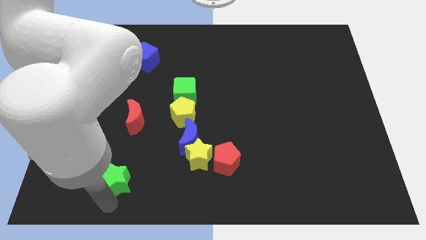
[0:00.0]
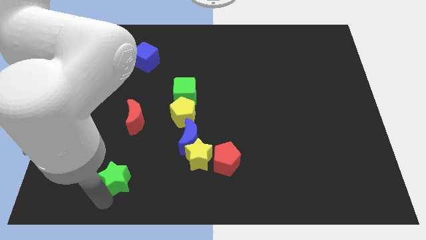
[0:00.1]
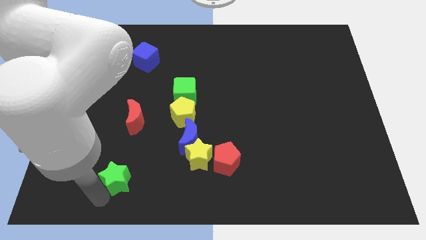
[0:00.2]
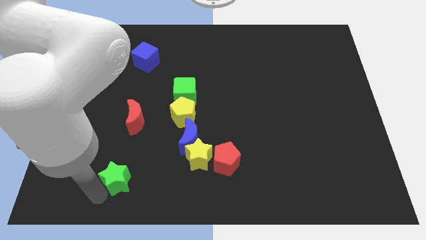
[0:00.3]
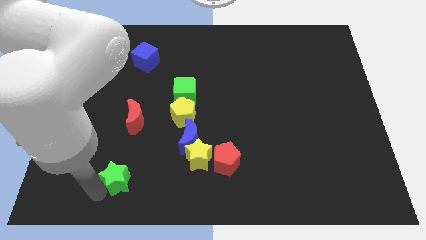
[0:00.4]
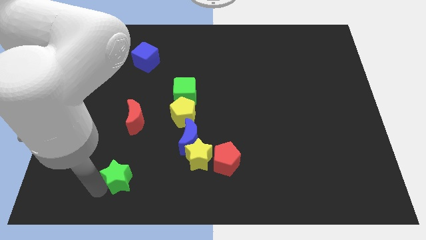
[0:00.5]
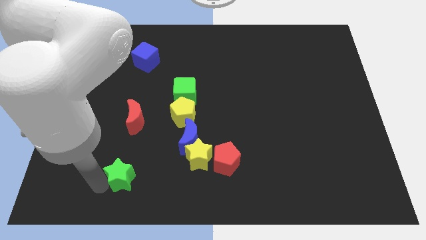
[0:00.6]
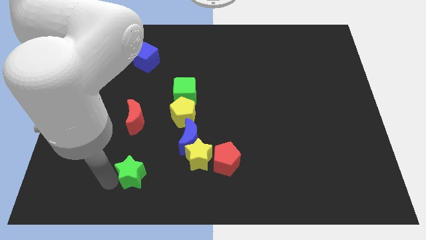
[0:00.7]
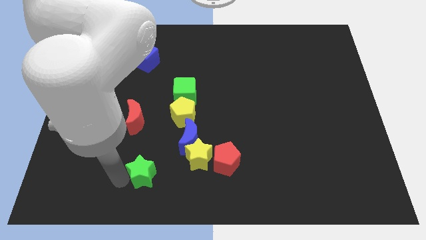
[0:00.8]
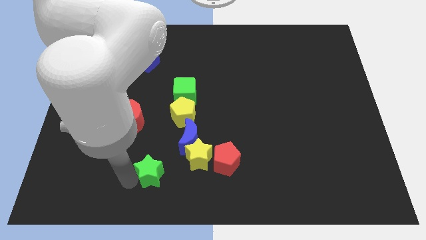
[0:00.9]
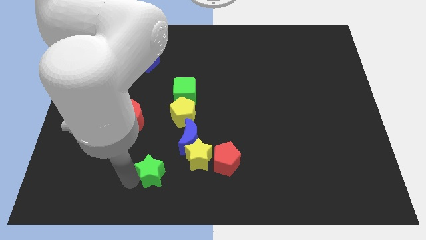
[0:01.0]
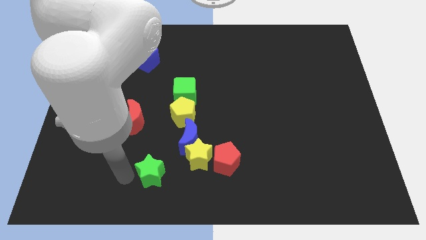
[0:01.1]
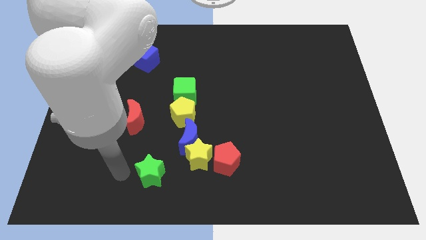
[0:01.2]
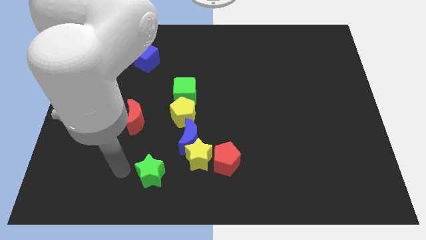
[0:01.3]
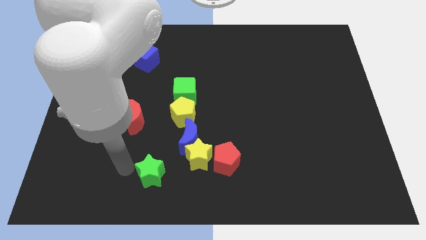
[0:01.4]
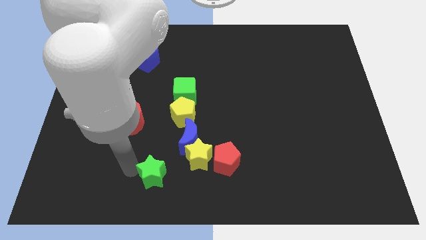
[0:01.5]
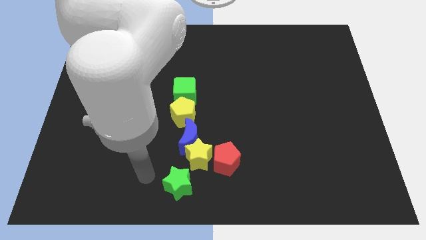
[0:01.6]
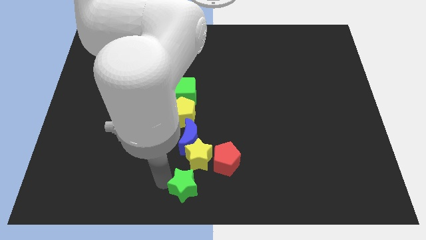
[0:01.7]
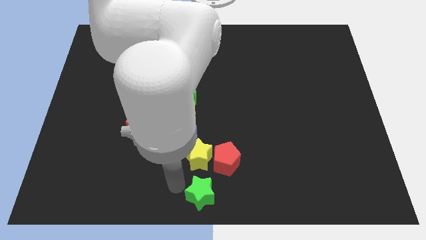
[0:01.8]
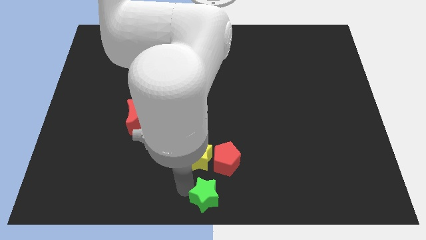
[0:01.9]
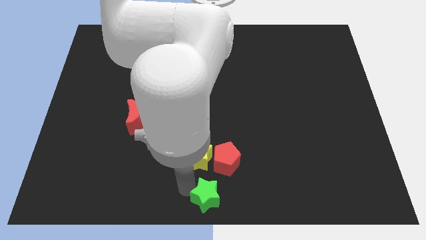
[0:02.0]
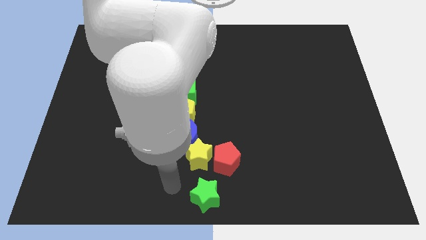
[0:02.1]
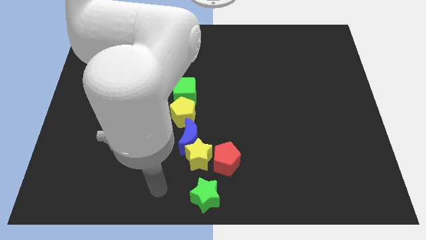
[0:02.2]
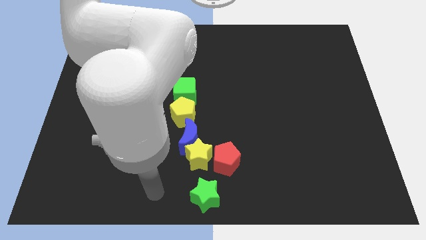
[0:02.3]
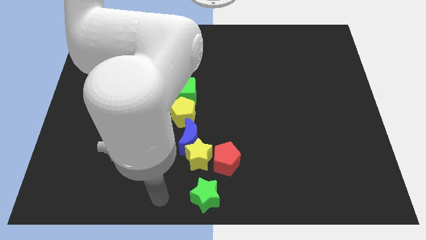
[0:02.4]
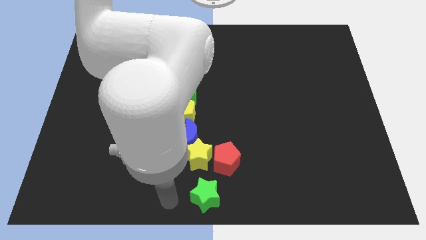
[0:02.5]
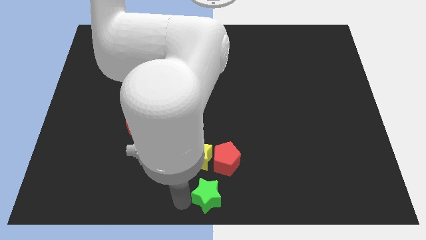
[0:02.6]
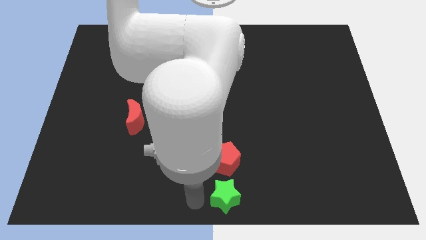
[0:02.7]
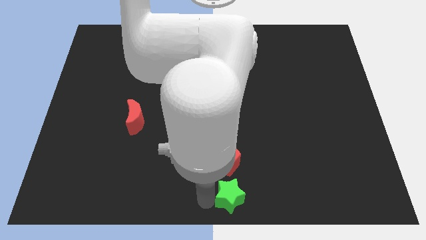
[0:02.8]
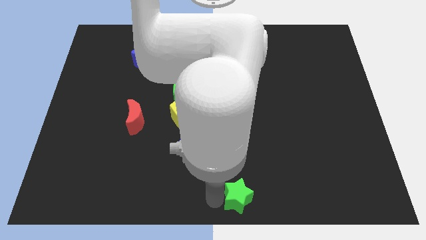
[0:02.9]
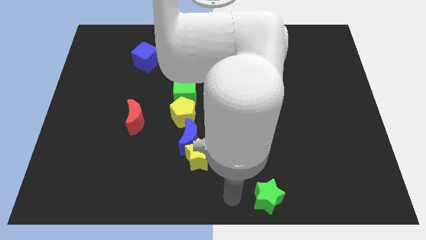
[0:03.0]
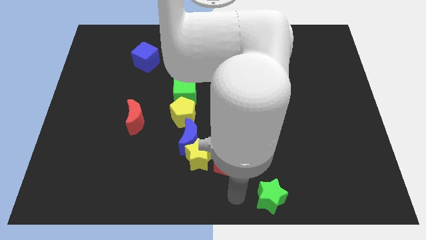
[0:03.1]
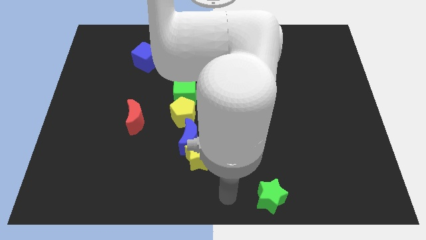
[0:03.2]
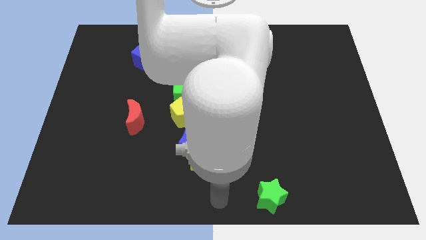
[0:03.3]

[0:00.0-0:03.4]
move the green star slightly to the right

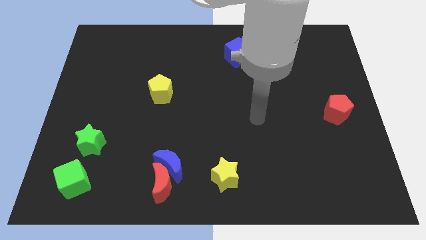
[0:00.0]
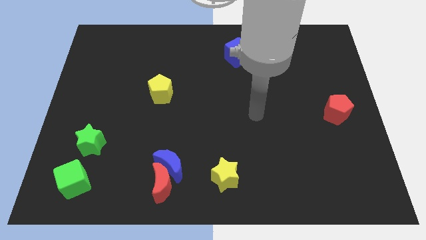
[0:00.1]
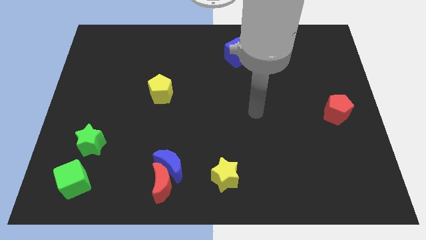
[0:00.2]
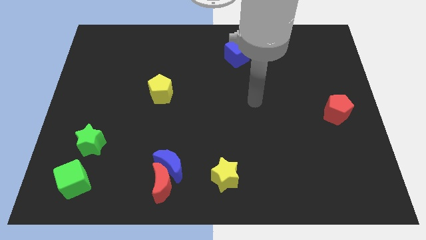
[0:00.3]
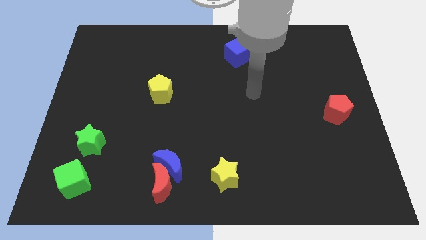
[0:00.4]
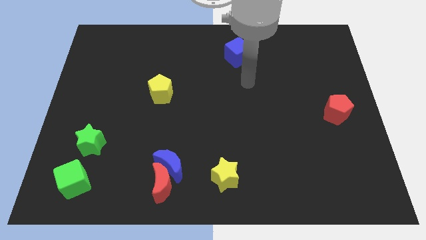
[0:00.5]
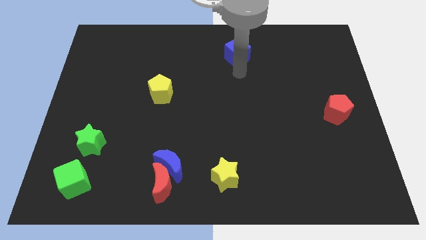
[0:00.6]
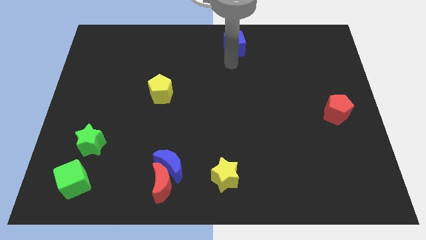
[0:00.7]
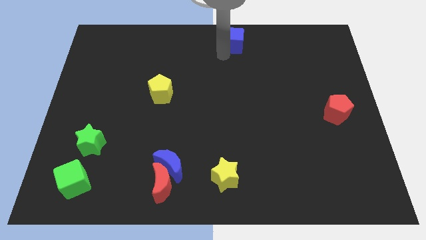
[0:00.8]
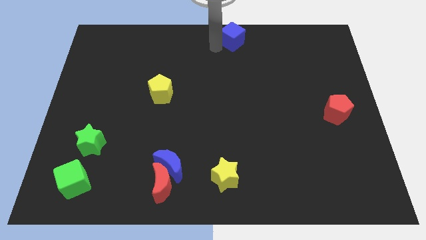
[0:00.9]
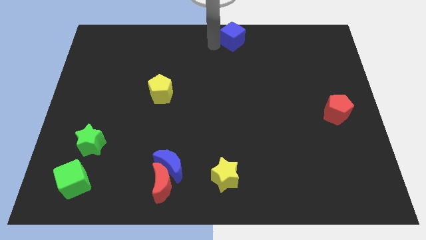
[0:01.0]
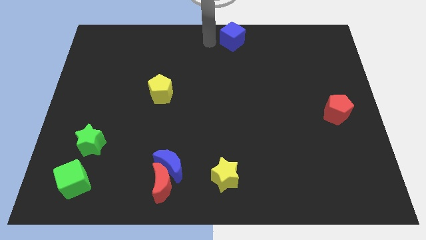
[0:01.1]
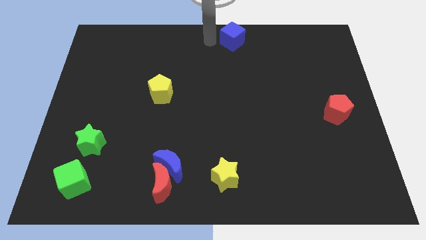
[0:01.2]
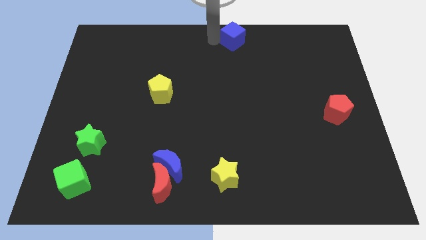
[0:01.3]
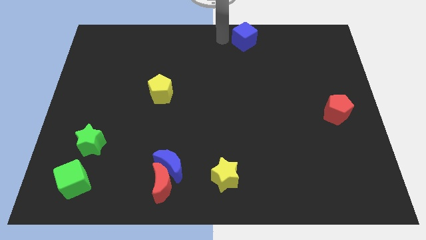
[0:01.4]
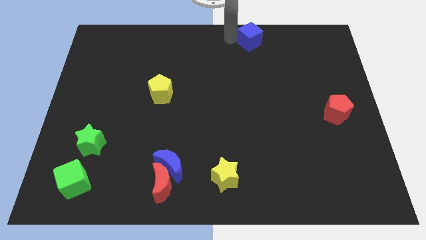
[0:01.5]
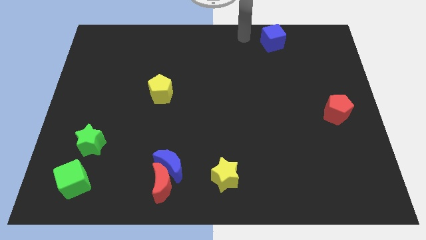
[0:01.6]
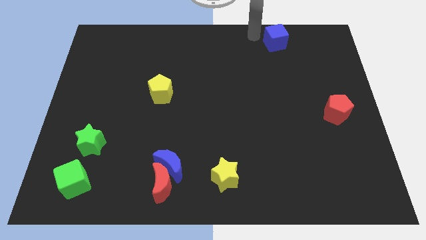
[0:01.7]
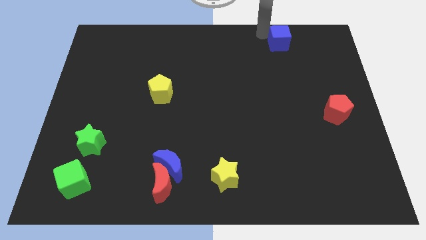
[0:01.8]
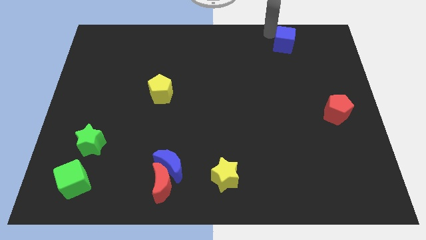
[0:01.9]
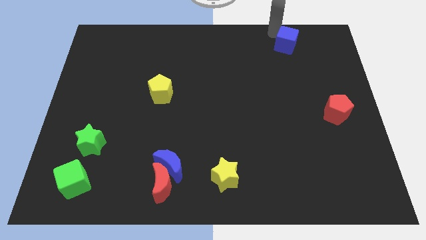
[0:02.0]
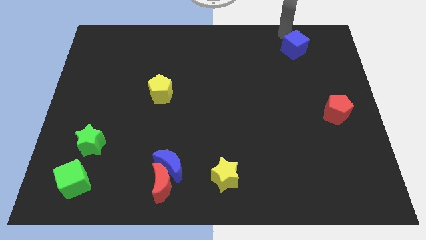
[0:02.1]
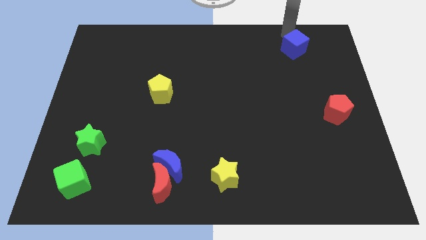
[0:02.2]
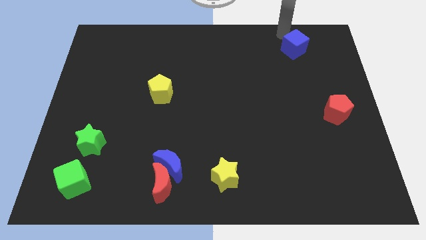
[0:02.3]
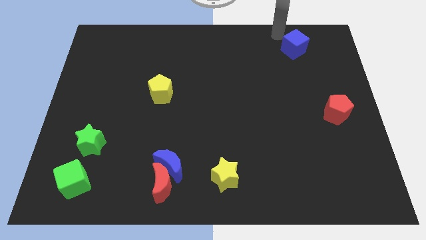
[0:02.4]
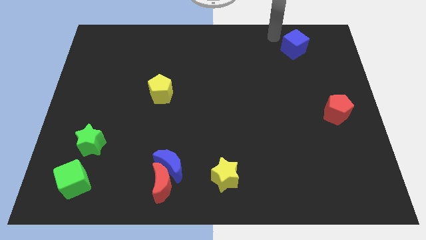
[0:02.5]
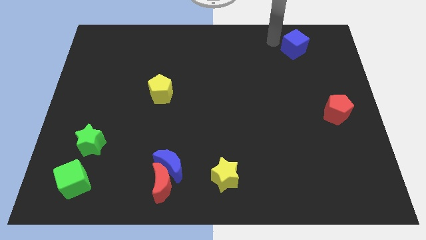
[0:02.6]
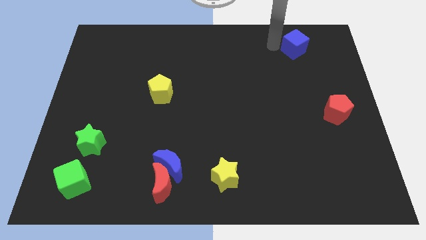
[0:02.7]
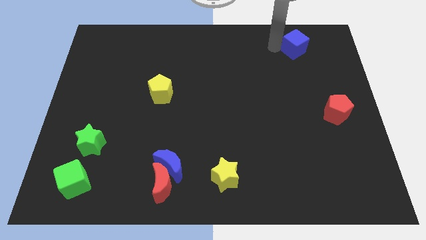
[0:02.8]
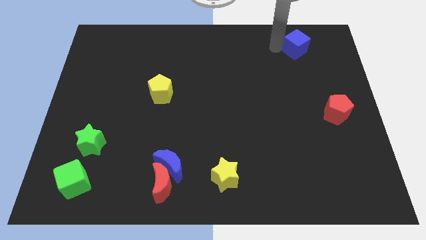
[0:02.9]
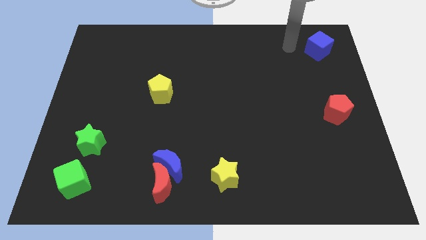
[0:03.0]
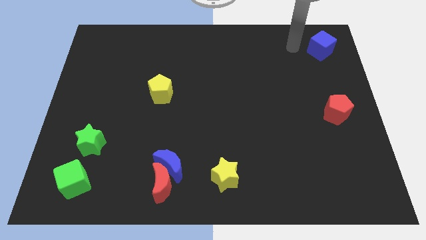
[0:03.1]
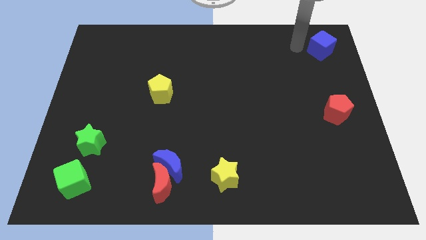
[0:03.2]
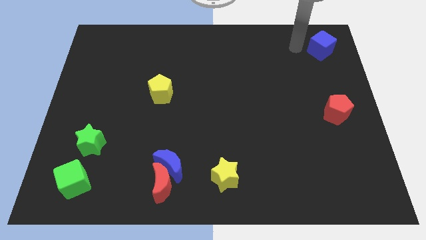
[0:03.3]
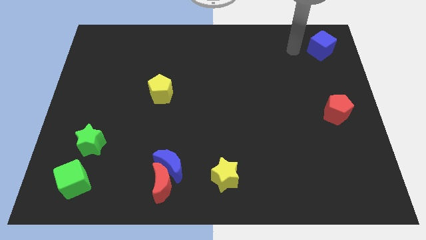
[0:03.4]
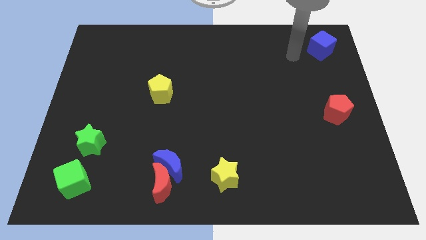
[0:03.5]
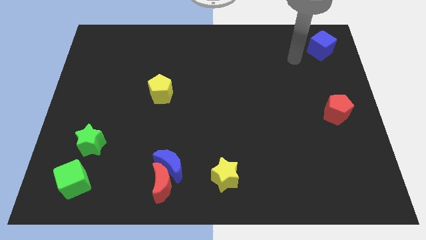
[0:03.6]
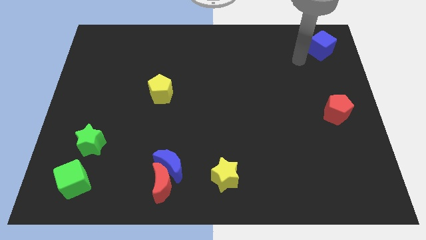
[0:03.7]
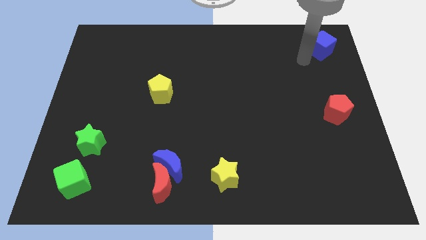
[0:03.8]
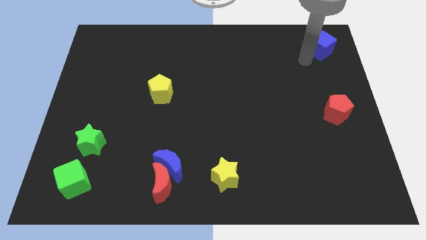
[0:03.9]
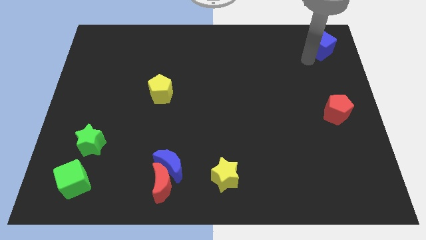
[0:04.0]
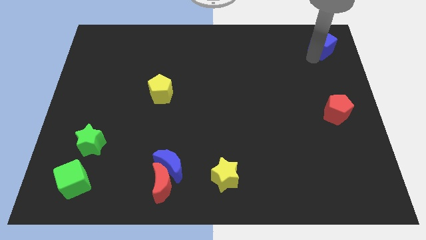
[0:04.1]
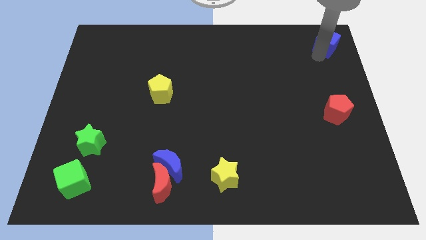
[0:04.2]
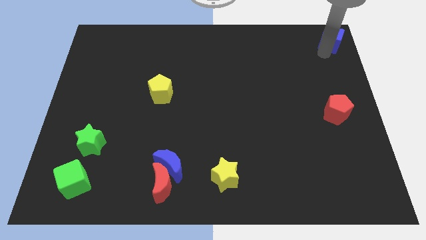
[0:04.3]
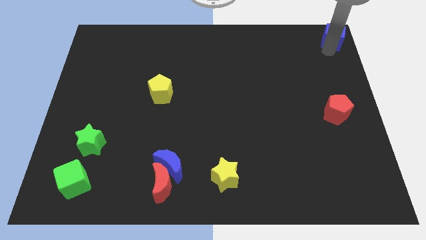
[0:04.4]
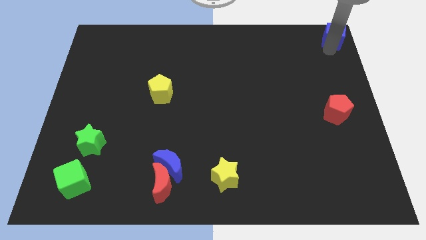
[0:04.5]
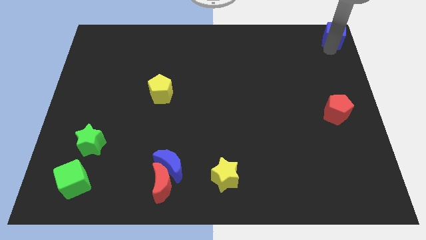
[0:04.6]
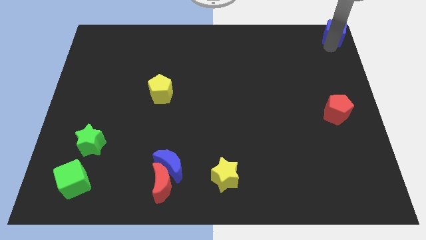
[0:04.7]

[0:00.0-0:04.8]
place the blue cube at the top right corner of the board

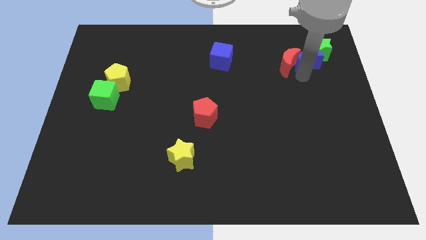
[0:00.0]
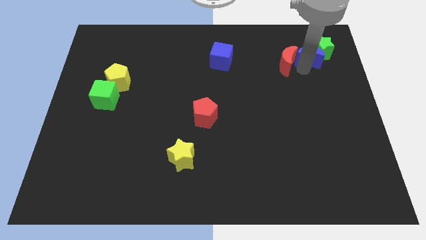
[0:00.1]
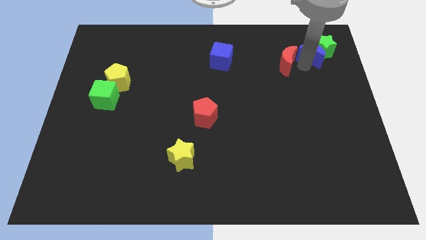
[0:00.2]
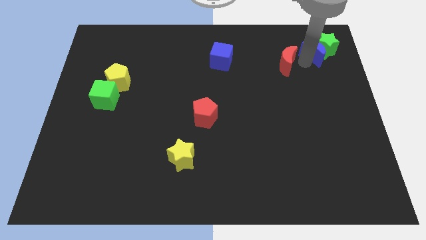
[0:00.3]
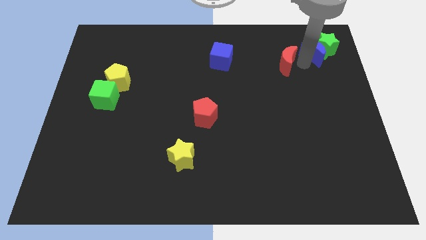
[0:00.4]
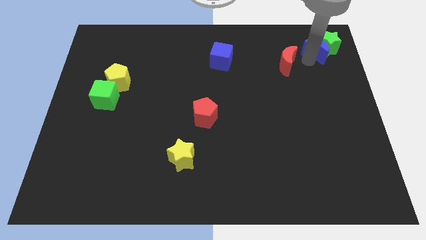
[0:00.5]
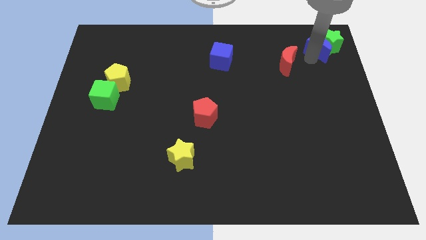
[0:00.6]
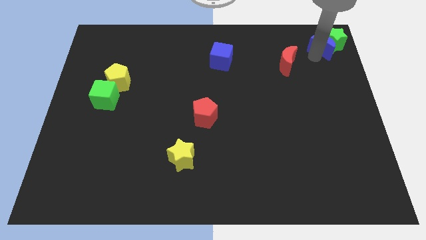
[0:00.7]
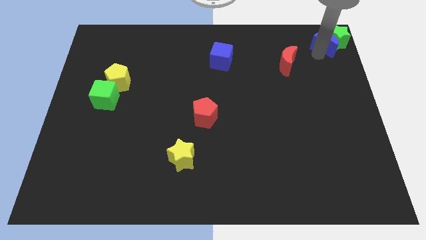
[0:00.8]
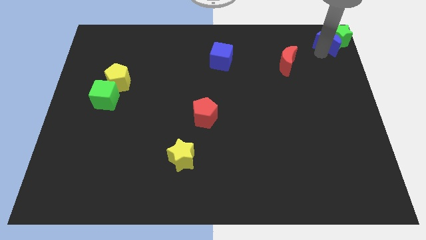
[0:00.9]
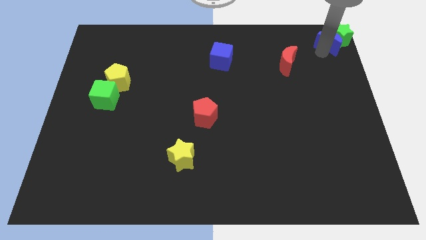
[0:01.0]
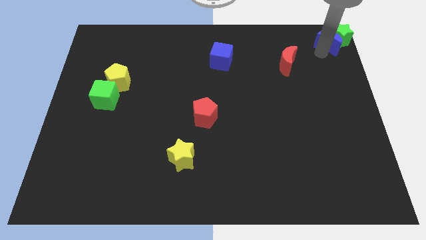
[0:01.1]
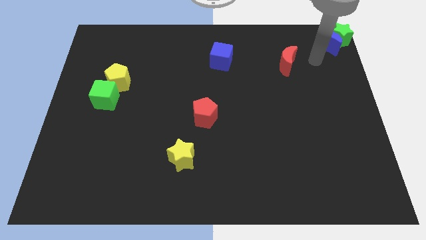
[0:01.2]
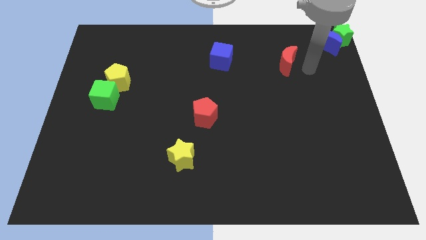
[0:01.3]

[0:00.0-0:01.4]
move the green star and blue crescent to the top right corner
